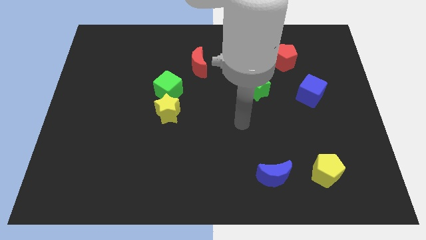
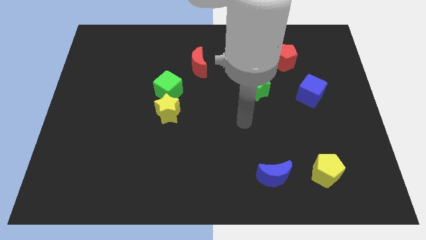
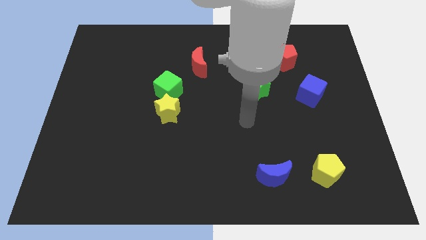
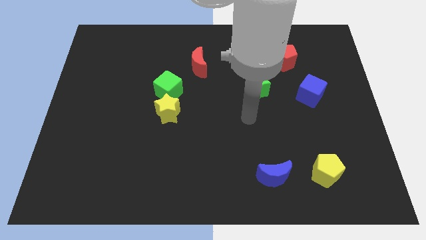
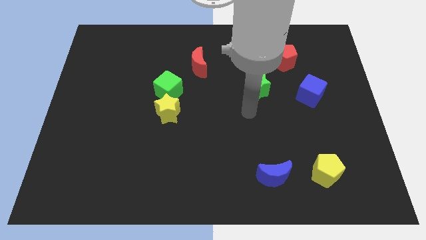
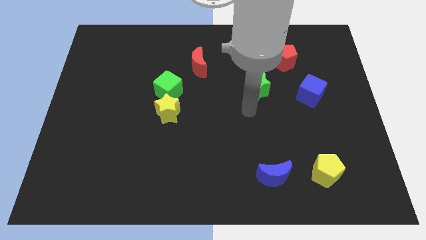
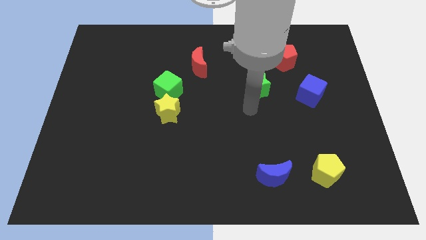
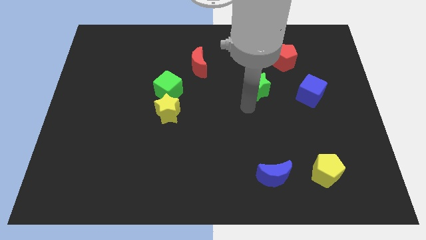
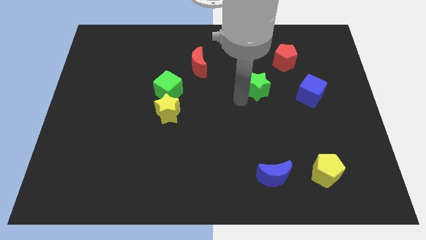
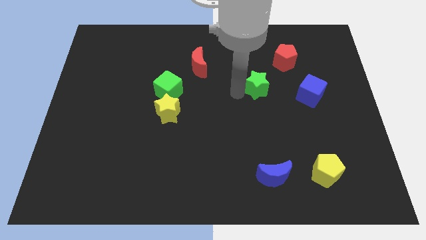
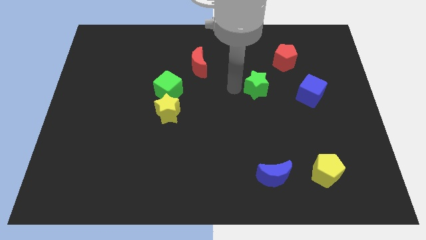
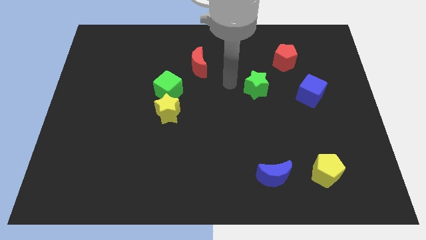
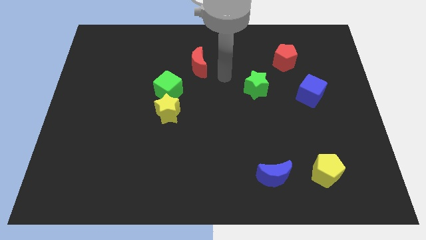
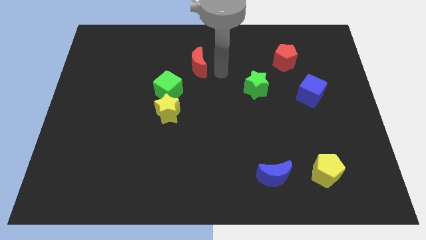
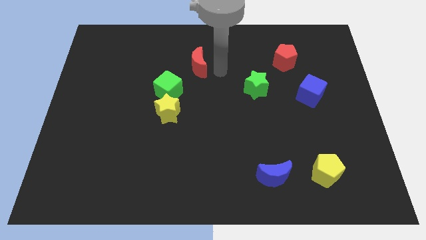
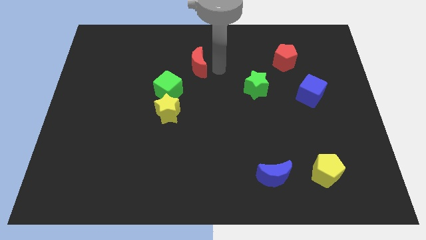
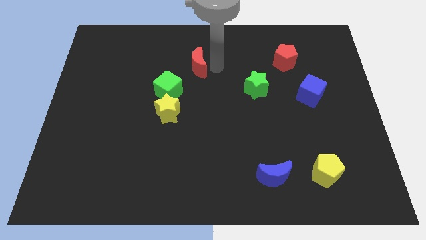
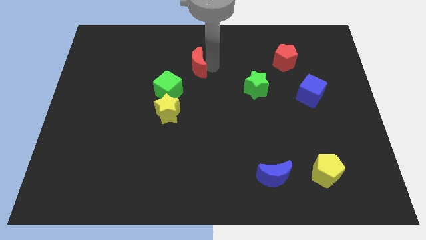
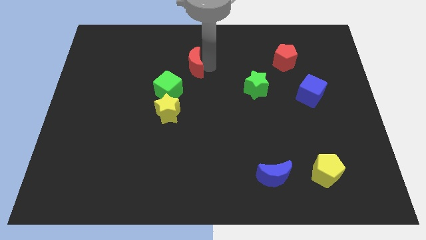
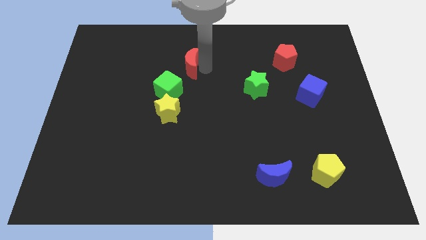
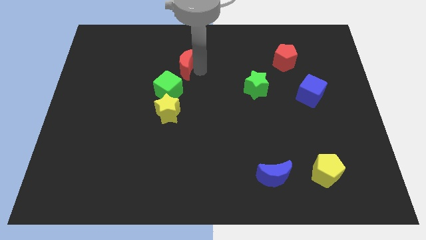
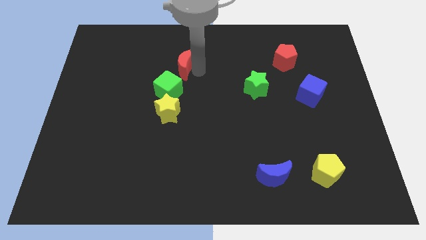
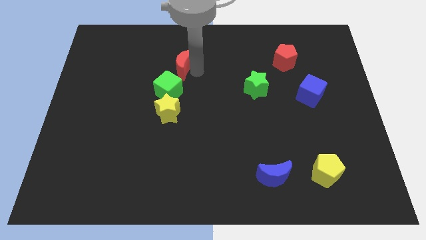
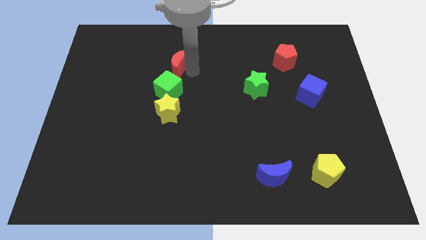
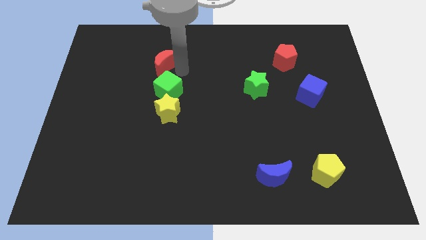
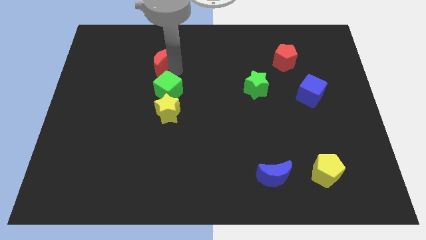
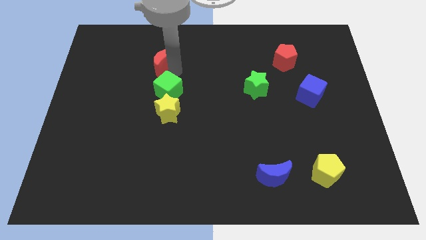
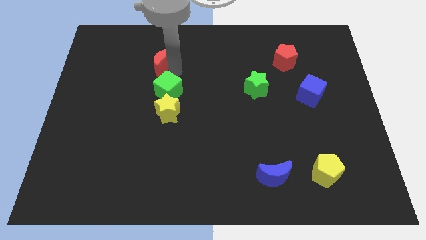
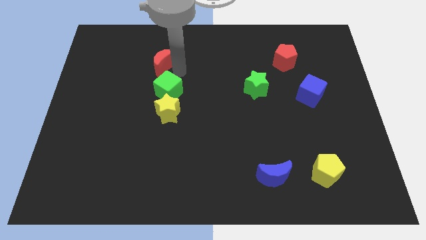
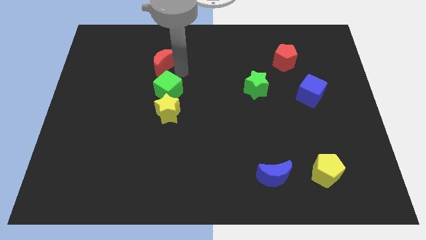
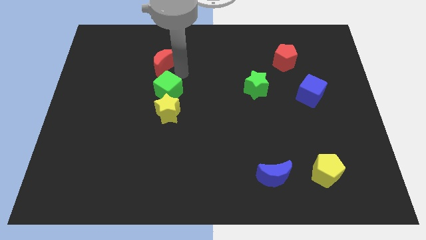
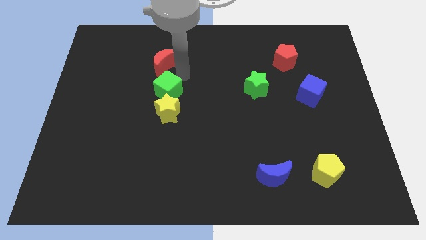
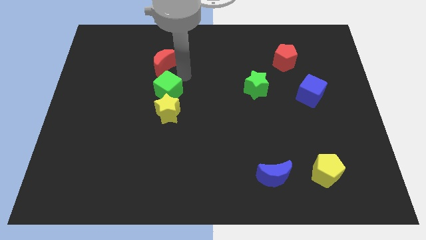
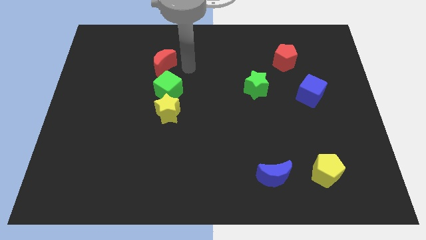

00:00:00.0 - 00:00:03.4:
move the red crescent vertically to the top side of the green cube

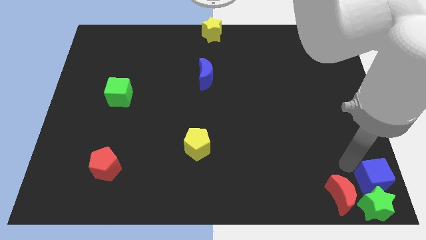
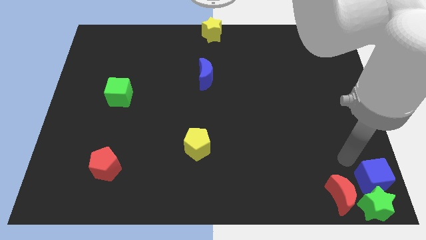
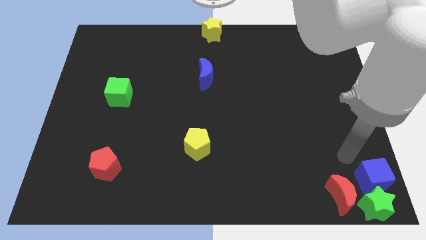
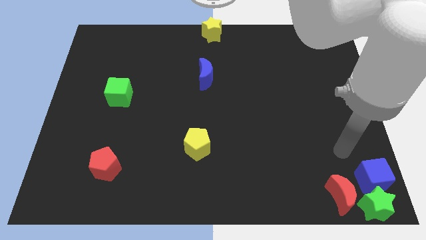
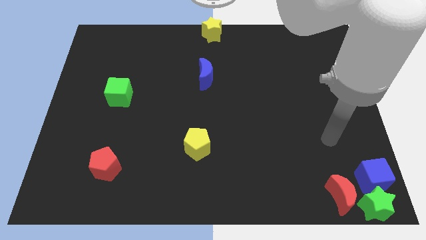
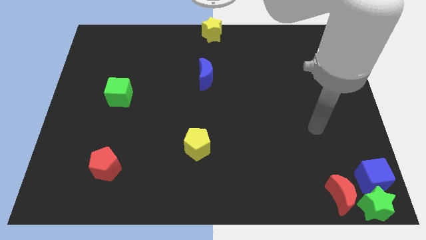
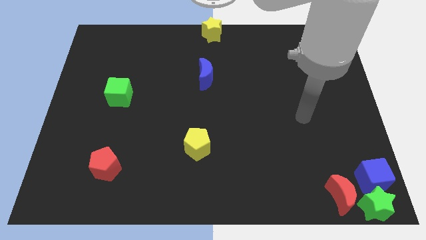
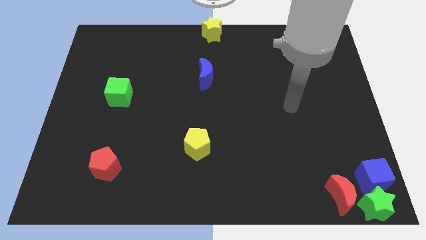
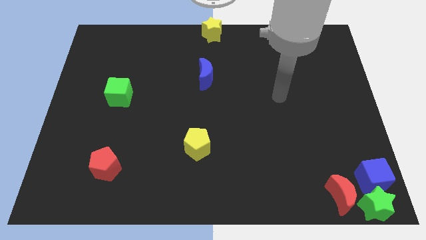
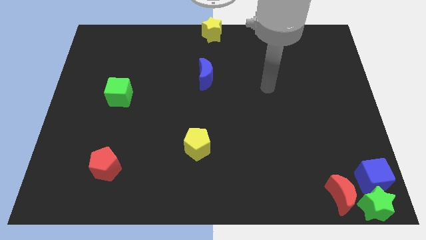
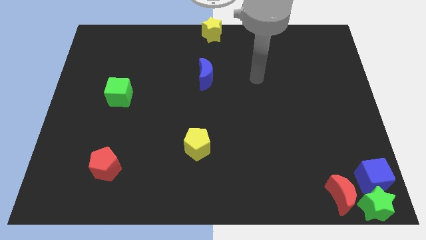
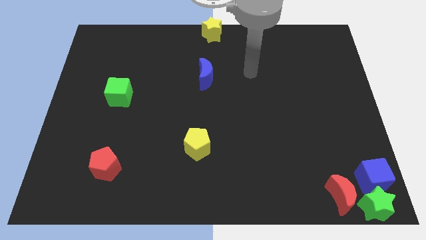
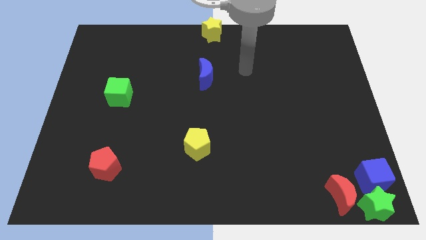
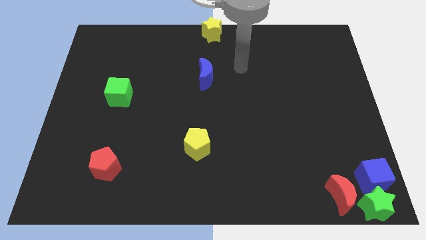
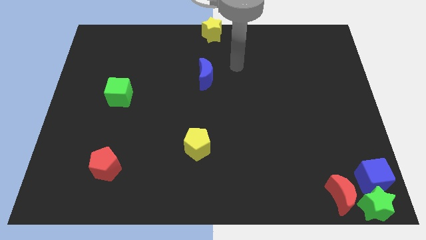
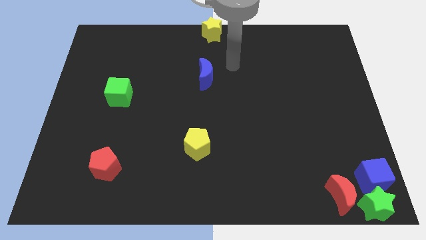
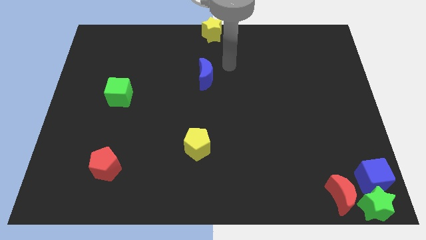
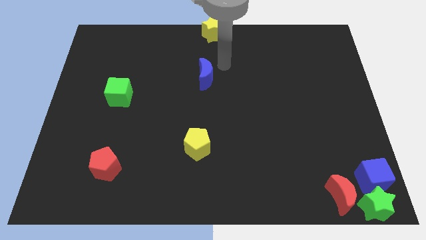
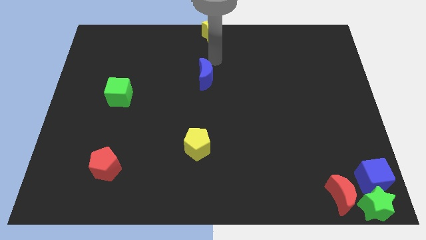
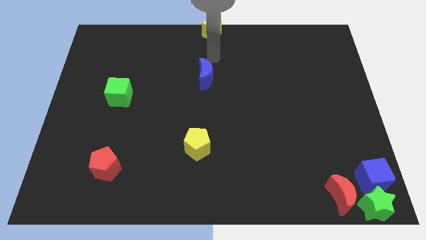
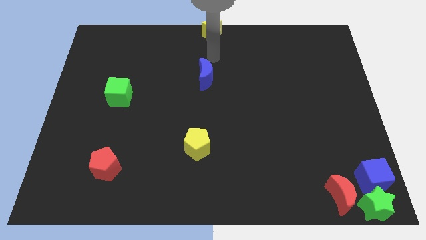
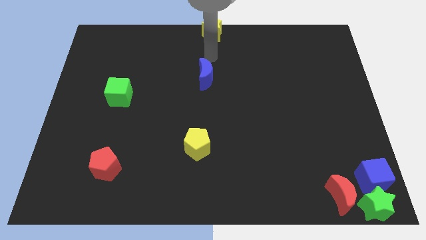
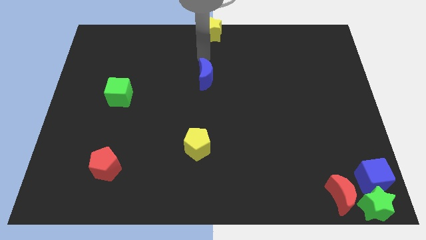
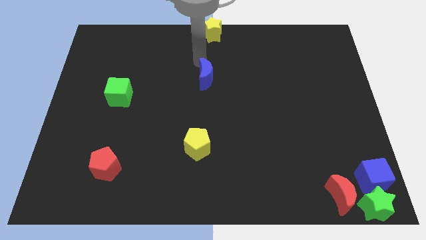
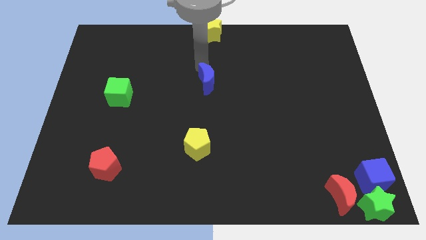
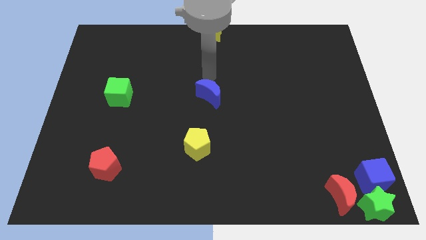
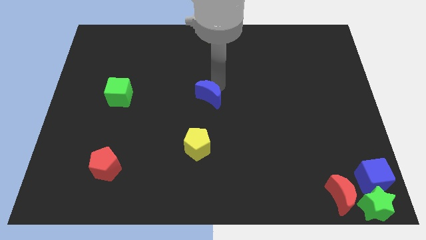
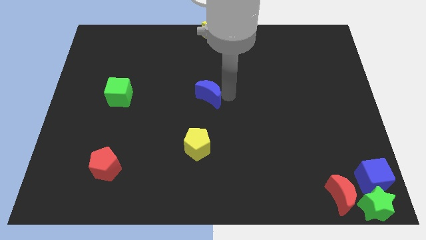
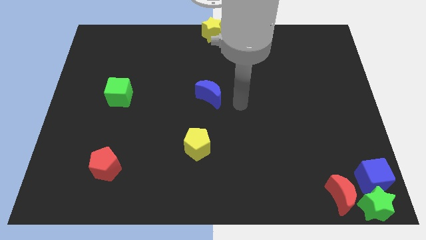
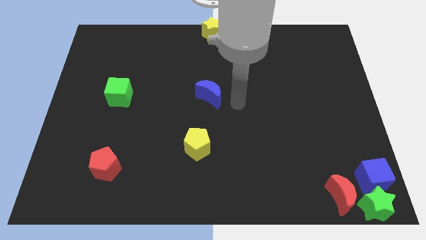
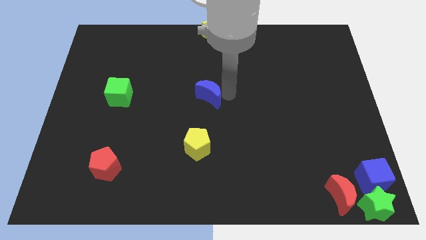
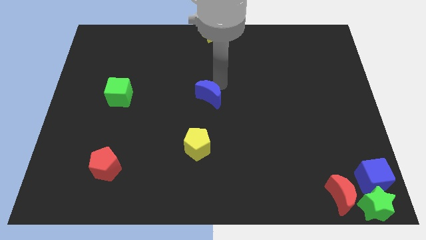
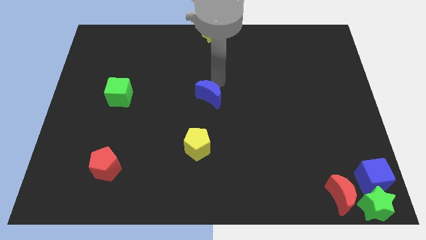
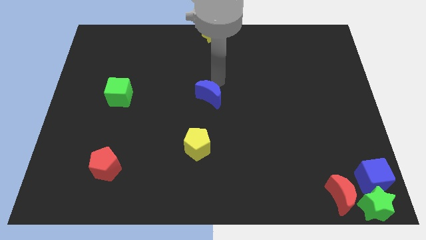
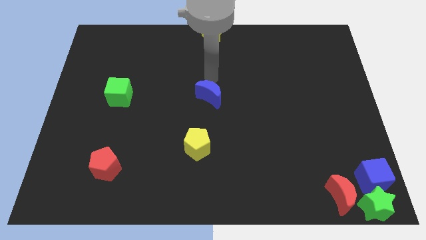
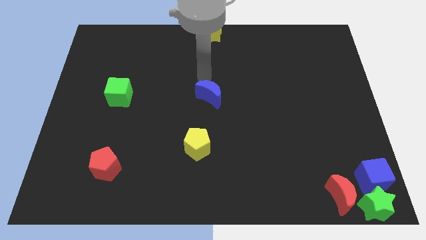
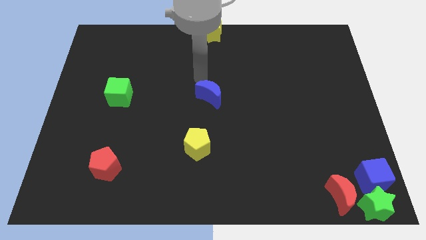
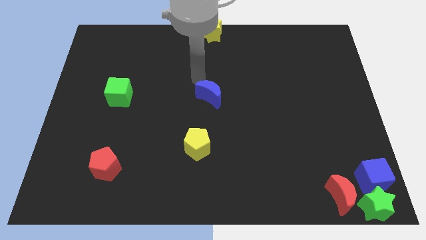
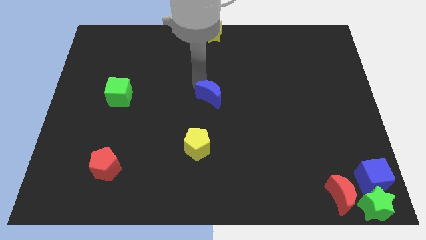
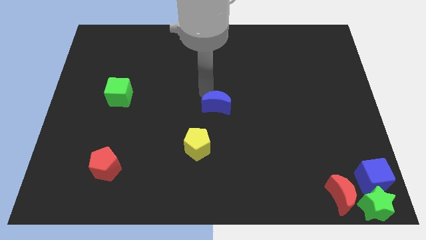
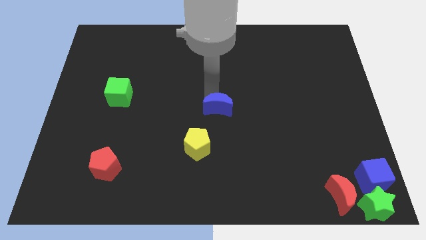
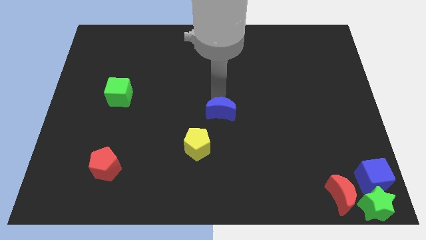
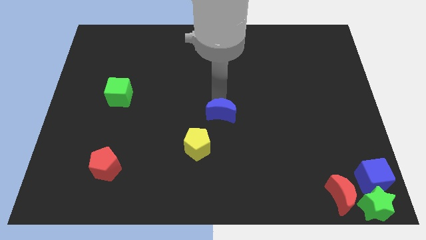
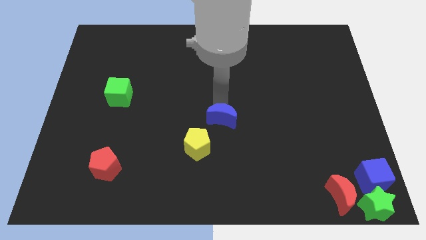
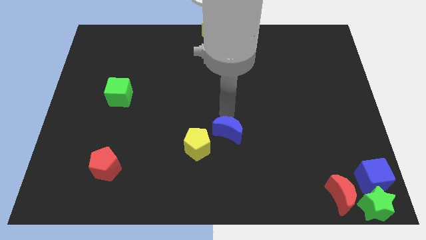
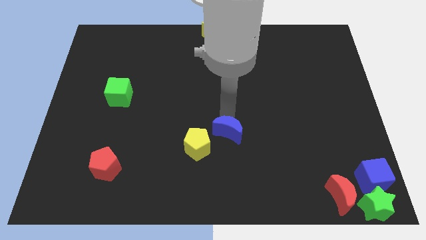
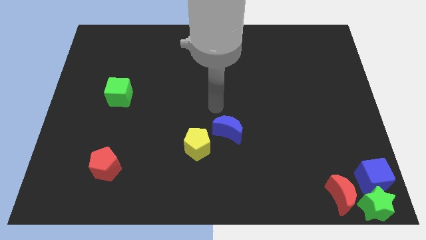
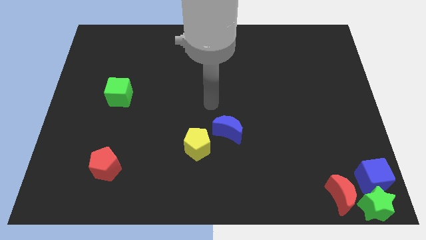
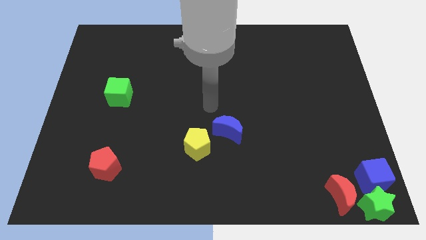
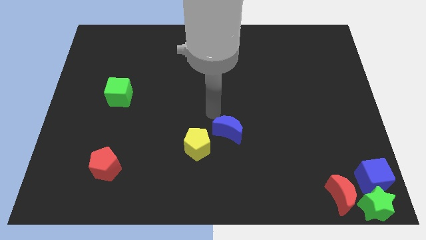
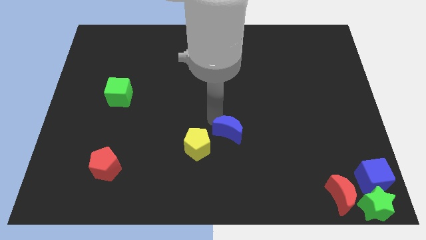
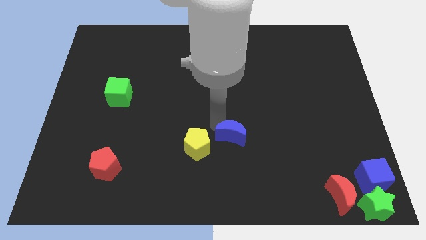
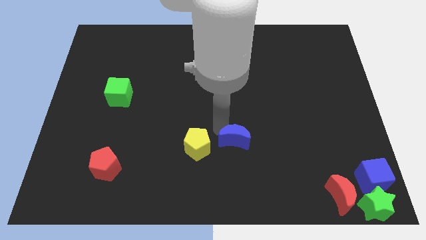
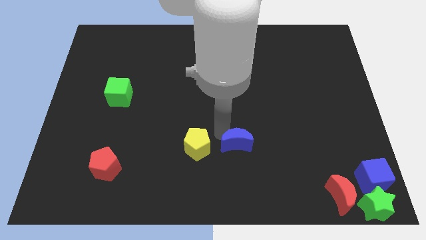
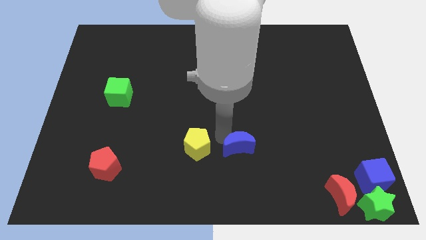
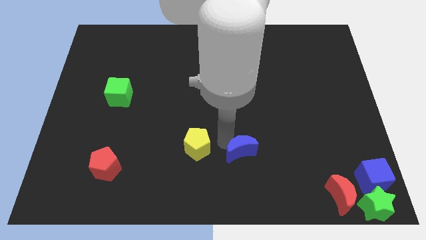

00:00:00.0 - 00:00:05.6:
move the blue moon right beside the yellow pentagon
